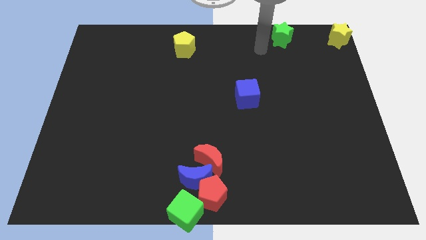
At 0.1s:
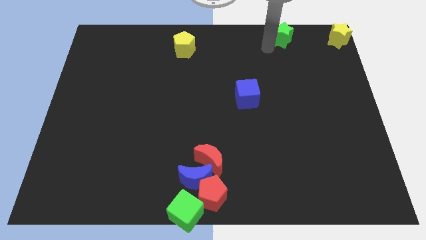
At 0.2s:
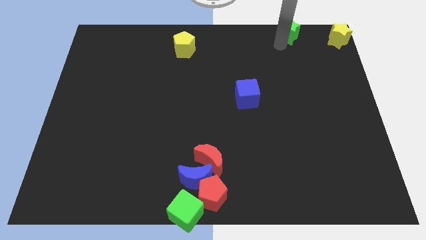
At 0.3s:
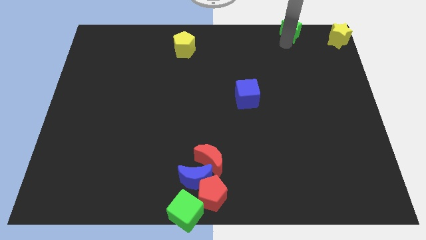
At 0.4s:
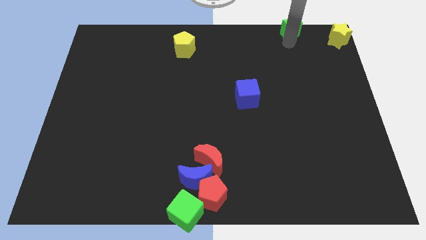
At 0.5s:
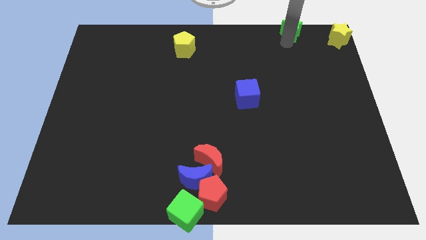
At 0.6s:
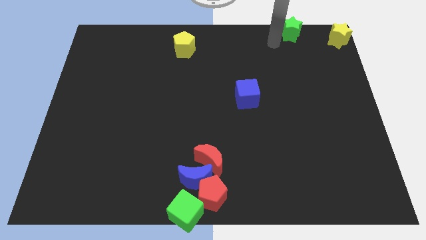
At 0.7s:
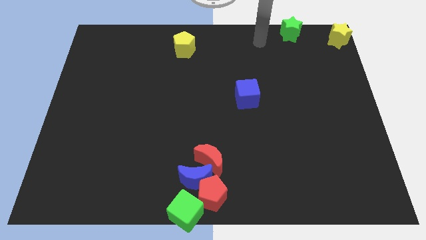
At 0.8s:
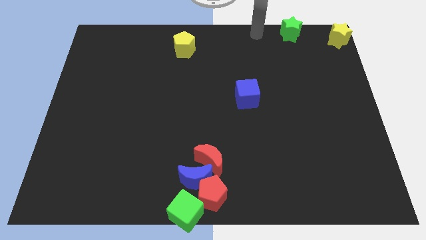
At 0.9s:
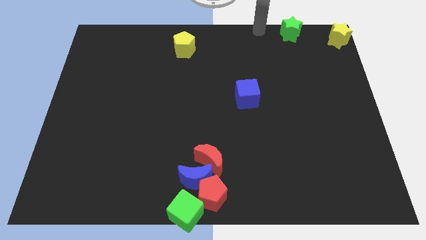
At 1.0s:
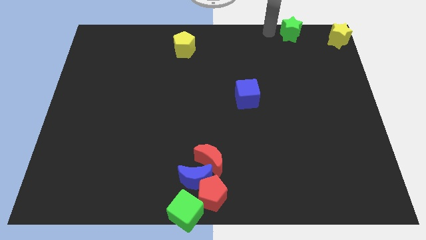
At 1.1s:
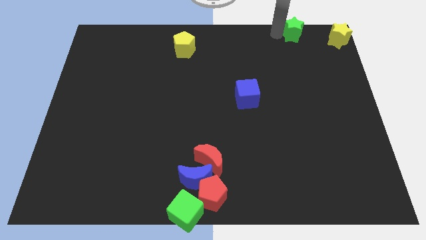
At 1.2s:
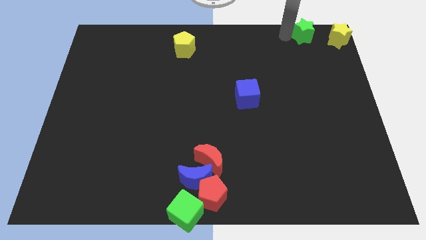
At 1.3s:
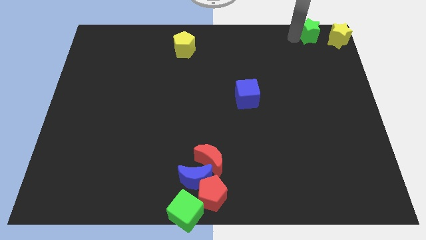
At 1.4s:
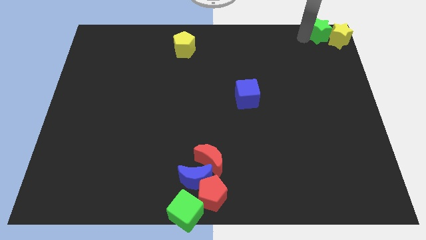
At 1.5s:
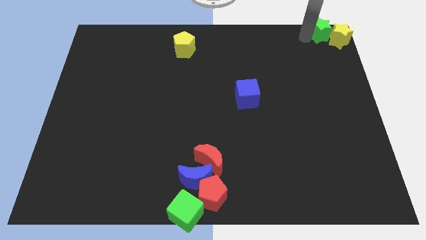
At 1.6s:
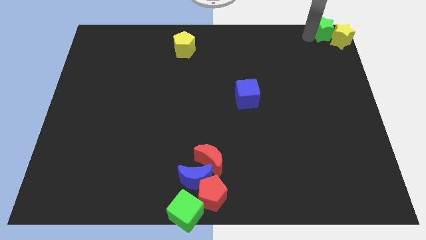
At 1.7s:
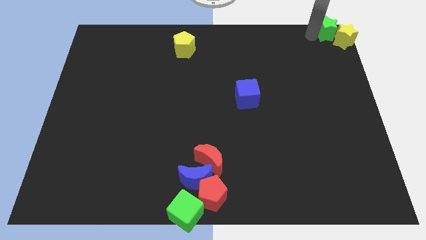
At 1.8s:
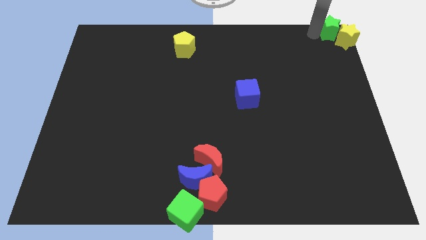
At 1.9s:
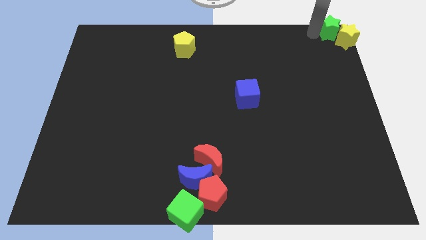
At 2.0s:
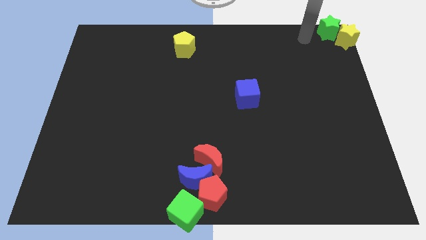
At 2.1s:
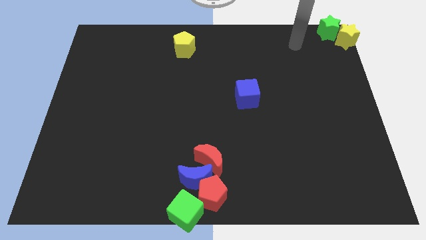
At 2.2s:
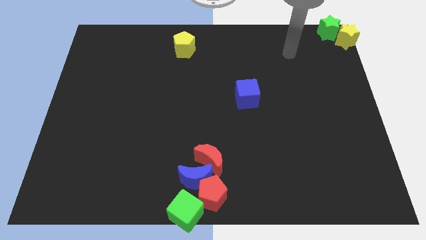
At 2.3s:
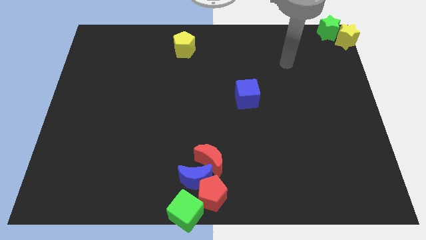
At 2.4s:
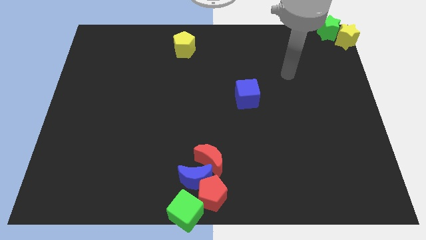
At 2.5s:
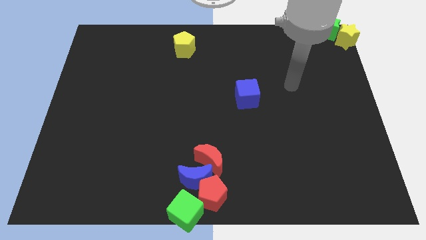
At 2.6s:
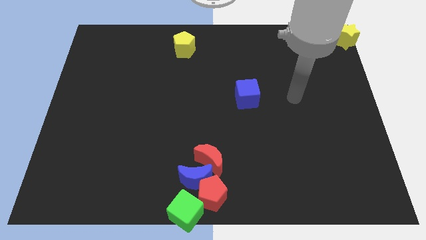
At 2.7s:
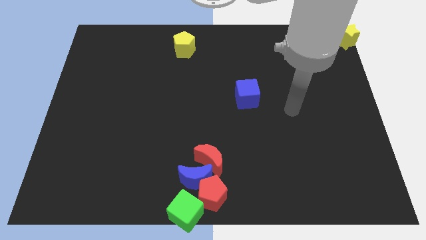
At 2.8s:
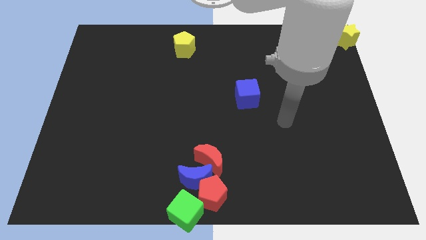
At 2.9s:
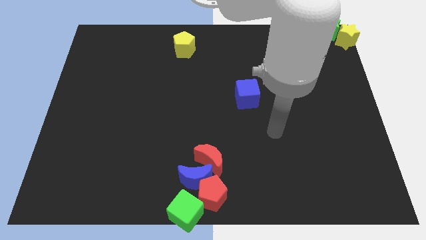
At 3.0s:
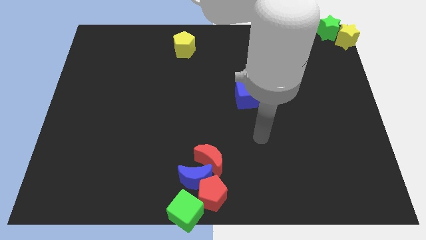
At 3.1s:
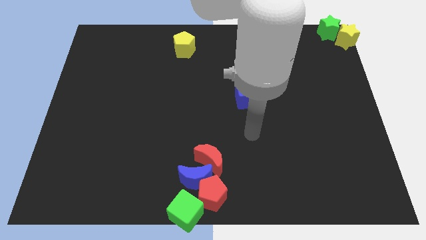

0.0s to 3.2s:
push the green star into the yellow star

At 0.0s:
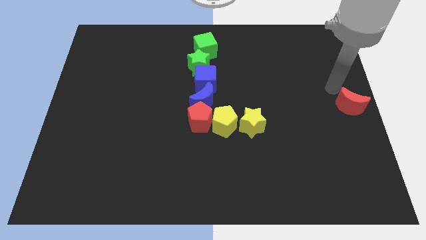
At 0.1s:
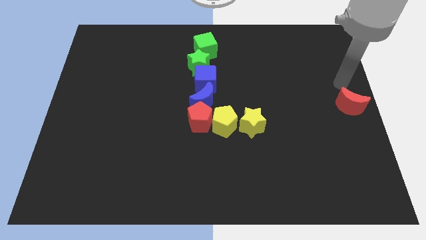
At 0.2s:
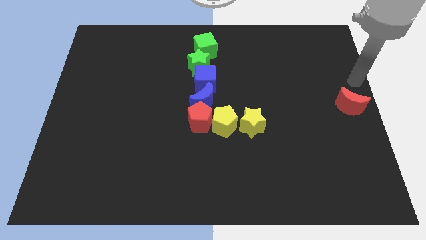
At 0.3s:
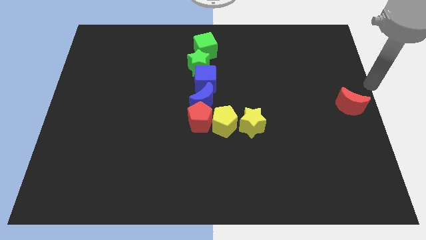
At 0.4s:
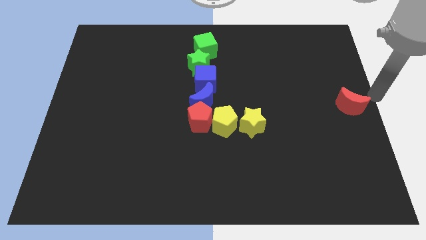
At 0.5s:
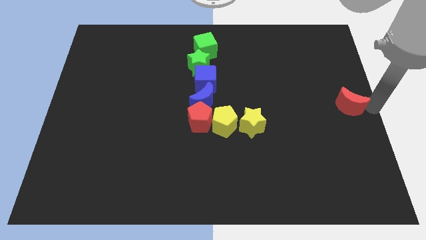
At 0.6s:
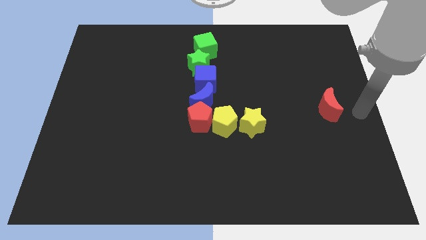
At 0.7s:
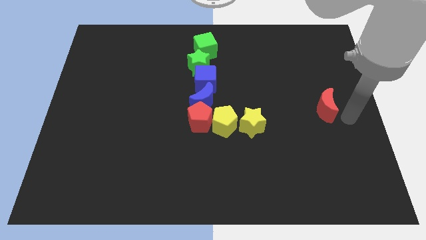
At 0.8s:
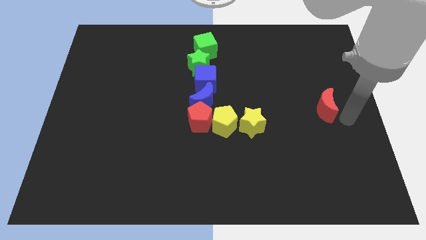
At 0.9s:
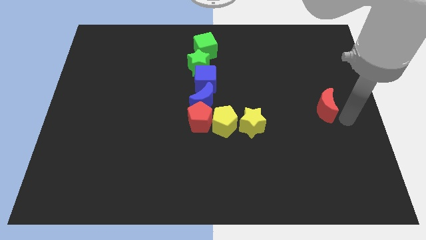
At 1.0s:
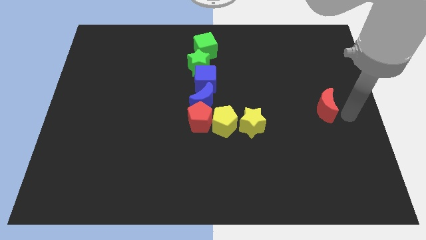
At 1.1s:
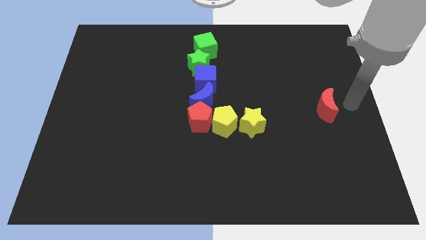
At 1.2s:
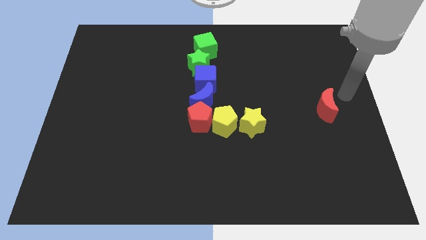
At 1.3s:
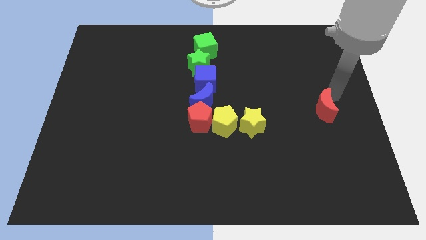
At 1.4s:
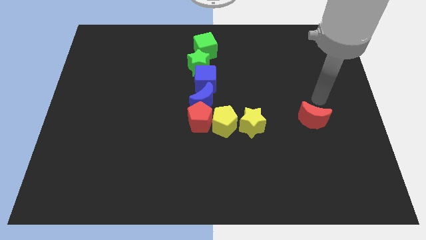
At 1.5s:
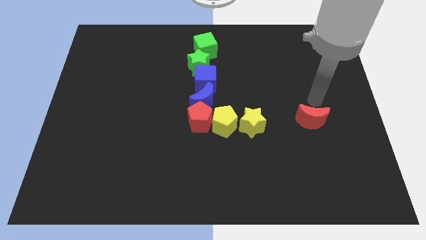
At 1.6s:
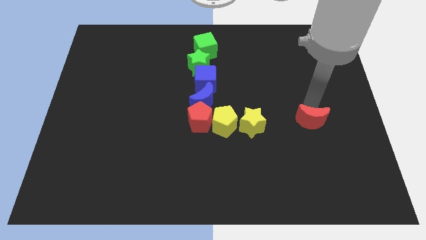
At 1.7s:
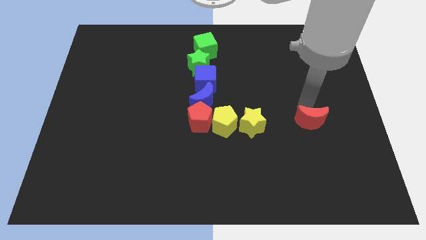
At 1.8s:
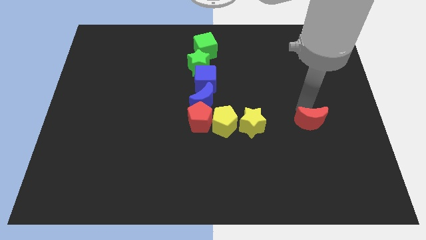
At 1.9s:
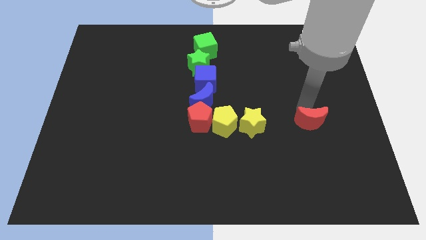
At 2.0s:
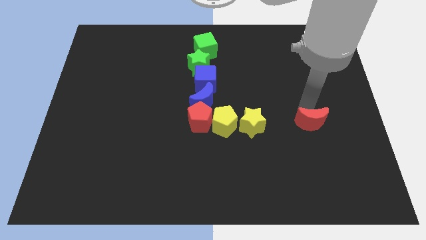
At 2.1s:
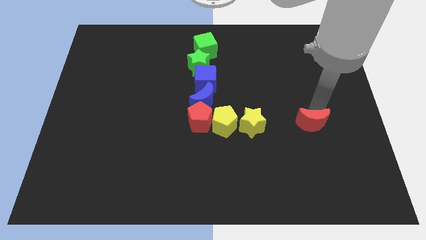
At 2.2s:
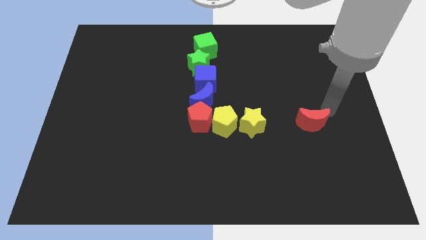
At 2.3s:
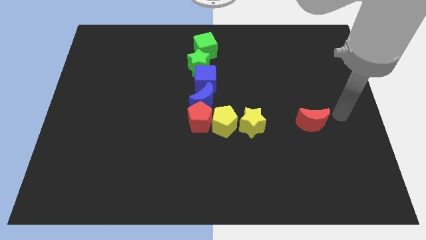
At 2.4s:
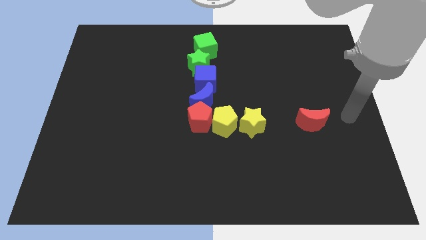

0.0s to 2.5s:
slide the red moon towards the yellow star

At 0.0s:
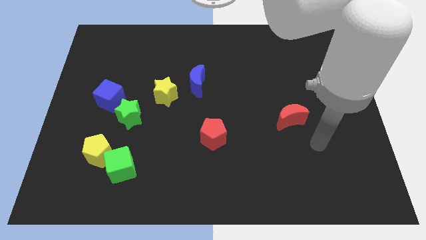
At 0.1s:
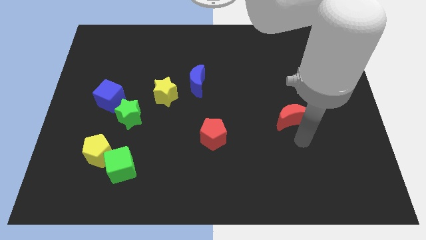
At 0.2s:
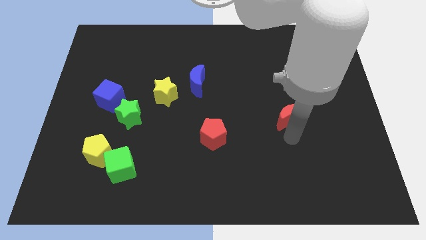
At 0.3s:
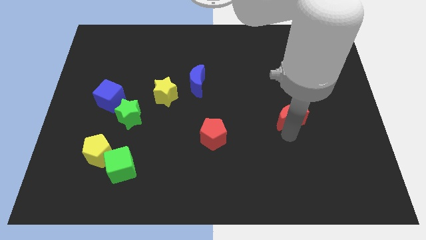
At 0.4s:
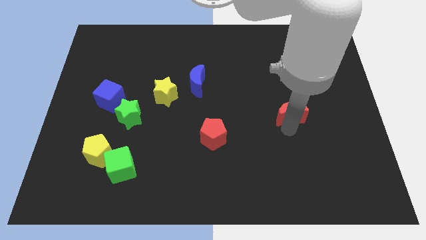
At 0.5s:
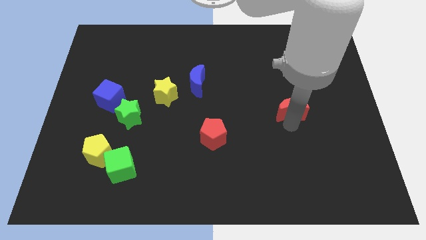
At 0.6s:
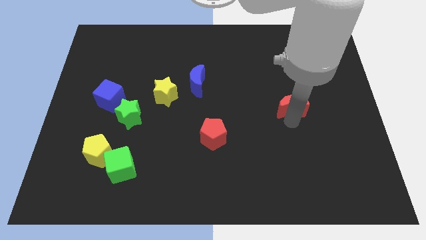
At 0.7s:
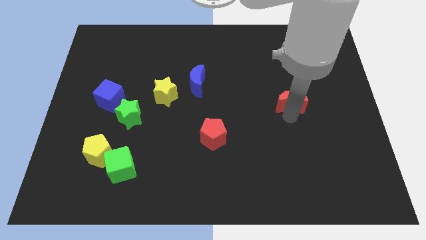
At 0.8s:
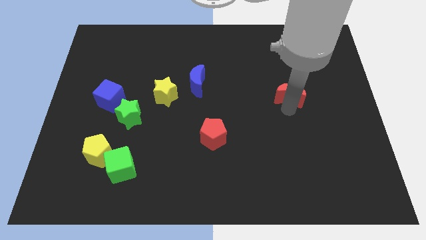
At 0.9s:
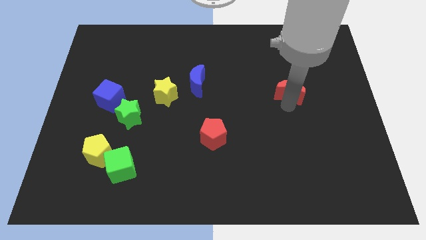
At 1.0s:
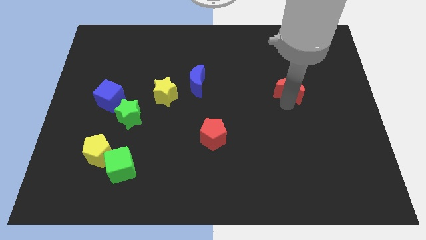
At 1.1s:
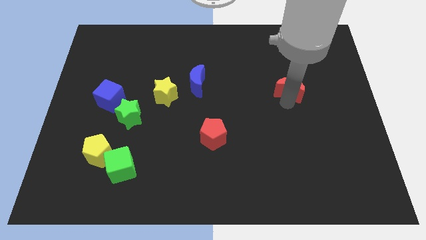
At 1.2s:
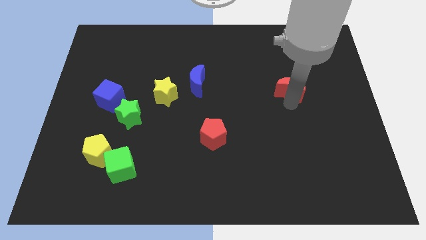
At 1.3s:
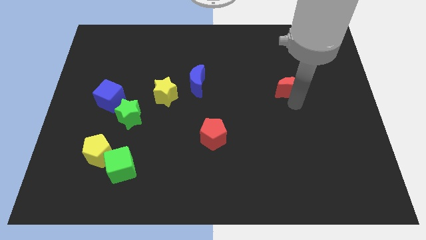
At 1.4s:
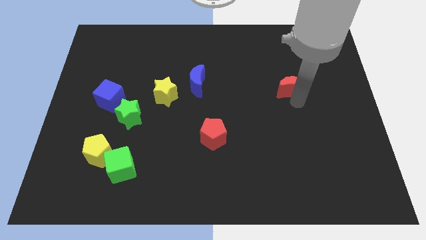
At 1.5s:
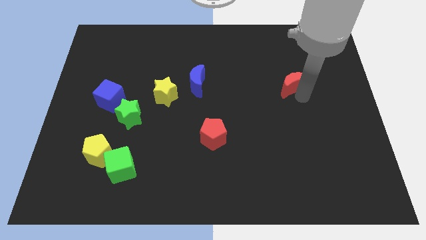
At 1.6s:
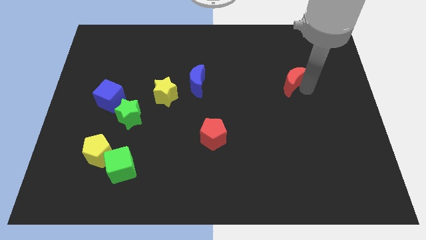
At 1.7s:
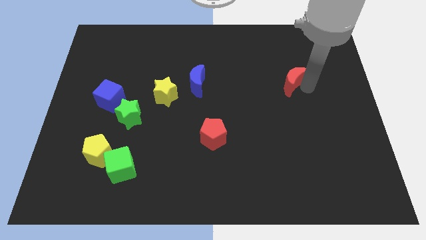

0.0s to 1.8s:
push the red crescent to the top of the board

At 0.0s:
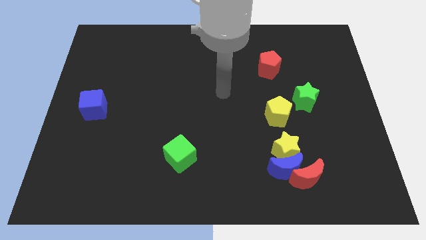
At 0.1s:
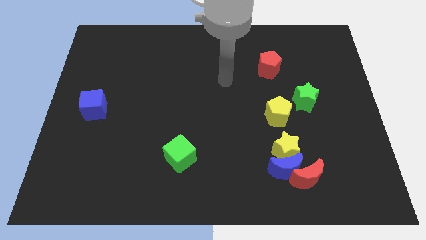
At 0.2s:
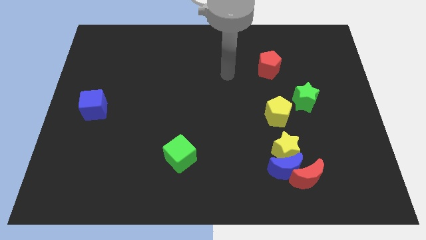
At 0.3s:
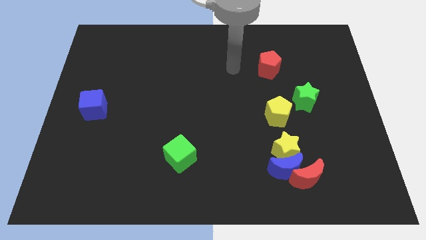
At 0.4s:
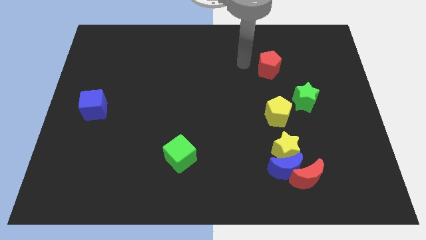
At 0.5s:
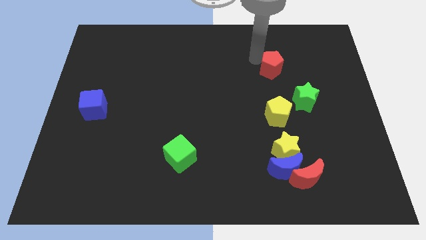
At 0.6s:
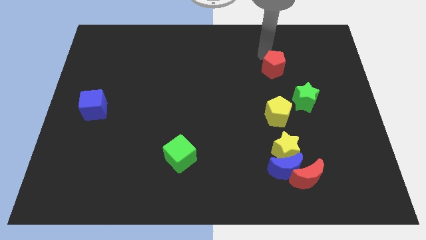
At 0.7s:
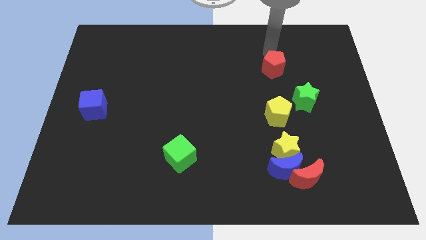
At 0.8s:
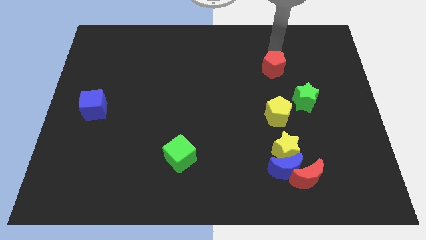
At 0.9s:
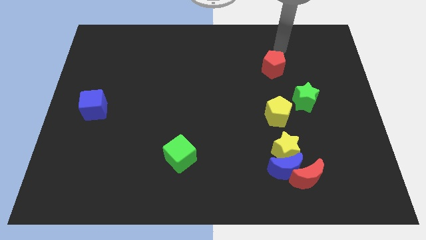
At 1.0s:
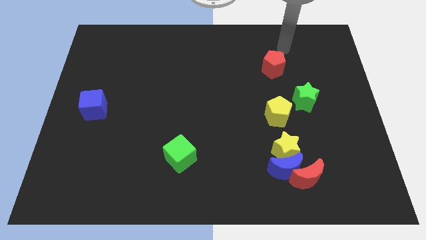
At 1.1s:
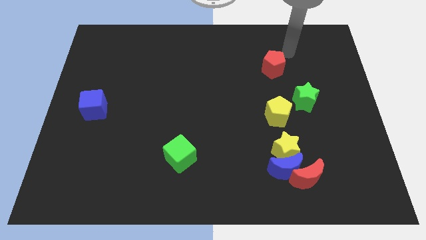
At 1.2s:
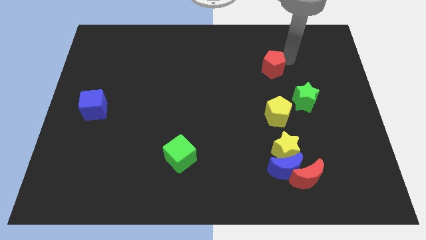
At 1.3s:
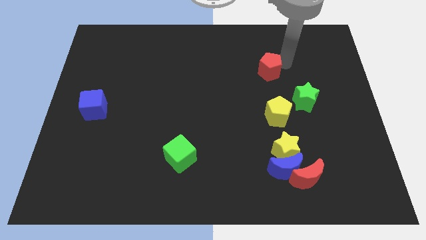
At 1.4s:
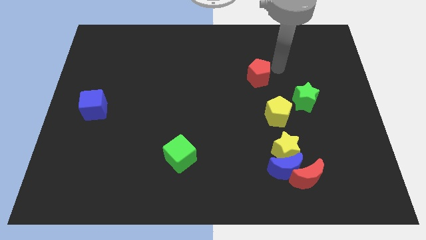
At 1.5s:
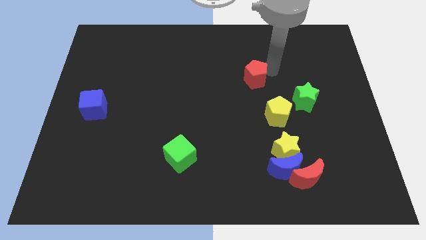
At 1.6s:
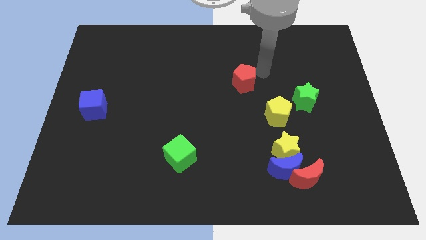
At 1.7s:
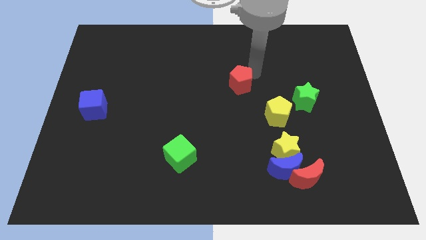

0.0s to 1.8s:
move the red pentagon diagonally on the top left side of the yellow pentagon
